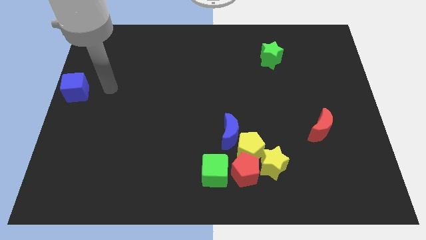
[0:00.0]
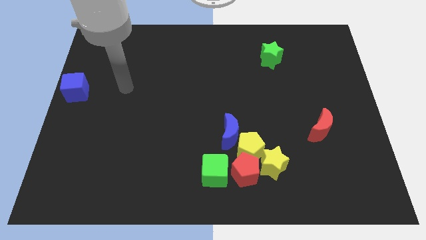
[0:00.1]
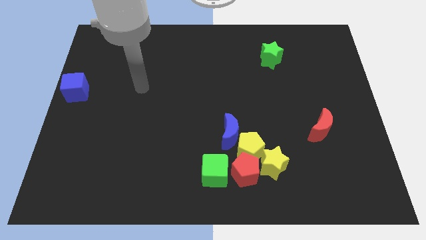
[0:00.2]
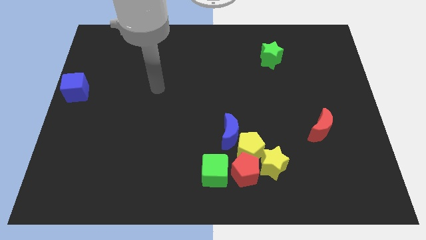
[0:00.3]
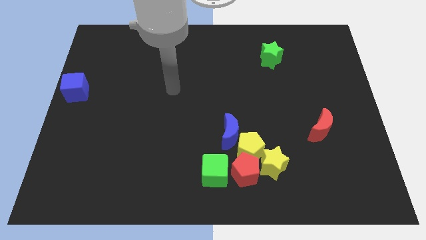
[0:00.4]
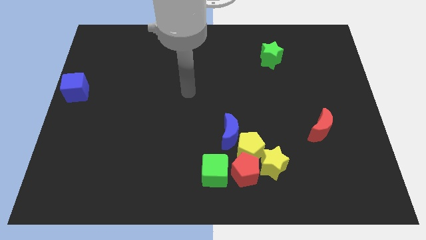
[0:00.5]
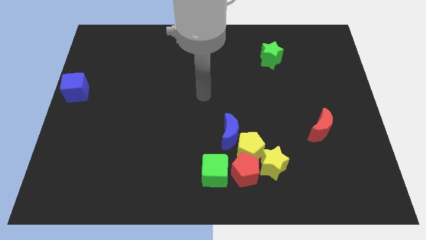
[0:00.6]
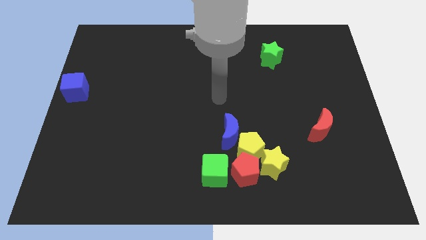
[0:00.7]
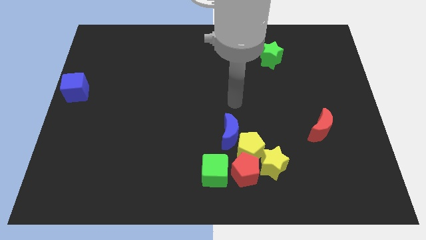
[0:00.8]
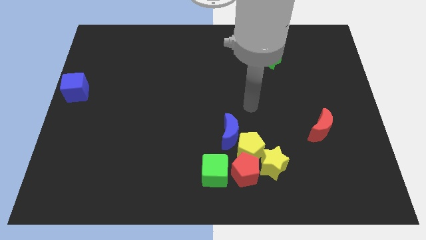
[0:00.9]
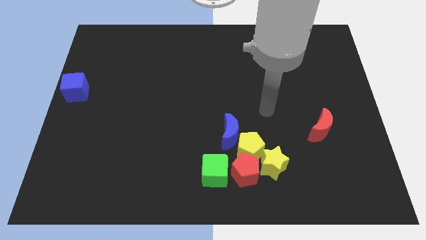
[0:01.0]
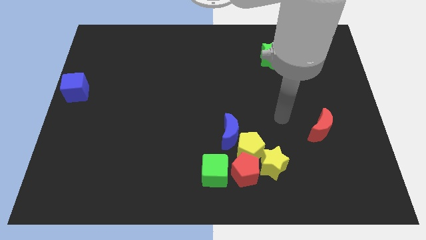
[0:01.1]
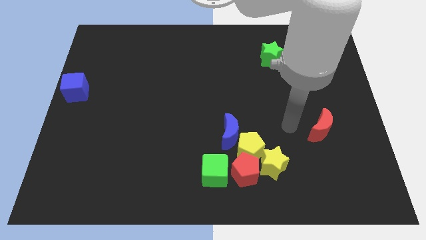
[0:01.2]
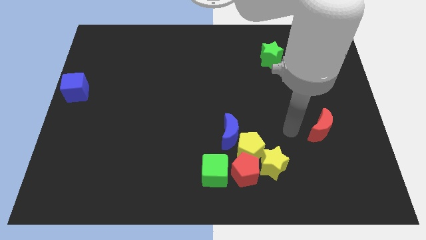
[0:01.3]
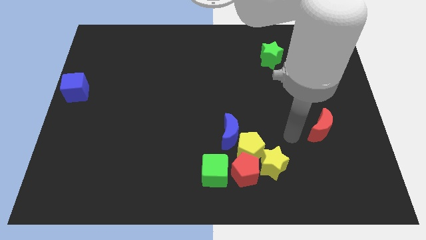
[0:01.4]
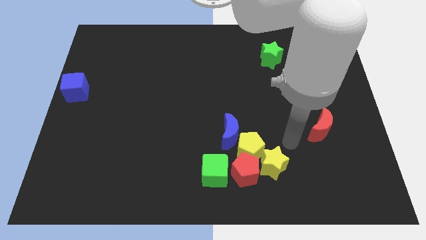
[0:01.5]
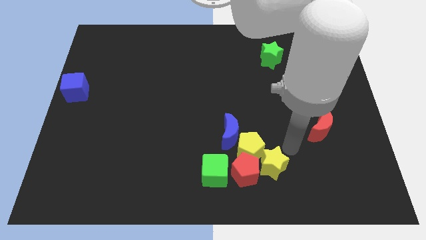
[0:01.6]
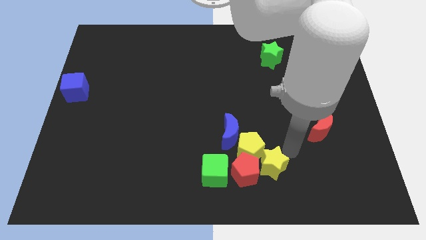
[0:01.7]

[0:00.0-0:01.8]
move your arm towards the yellow star

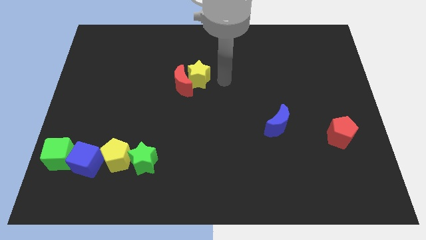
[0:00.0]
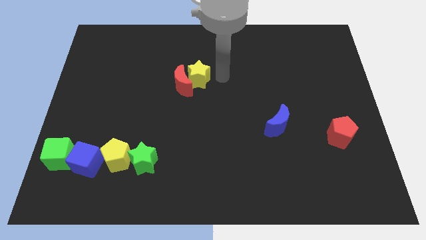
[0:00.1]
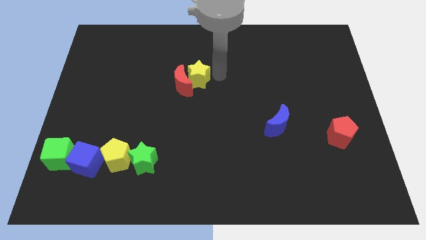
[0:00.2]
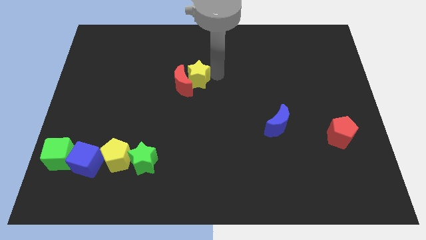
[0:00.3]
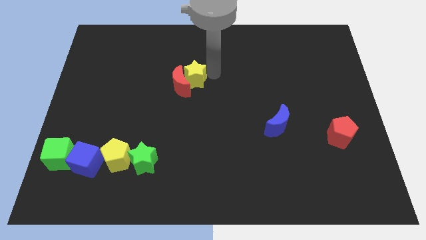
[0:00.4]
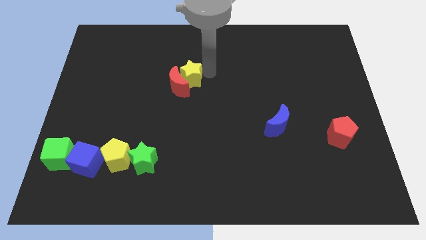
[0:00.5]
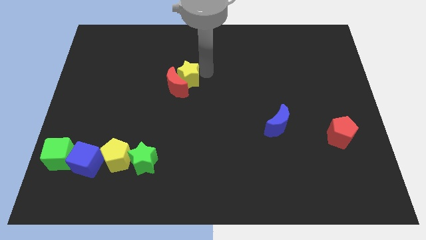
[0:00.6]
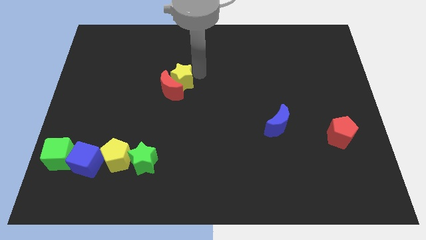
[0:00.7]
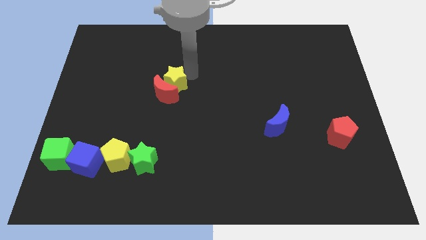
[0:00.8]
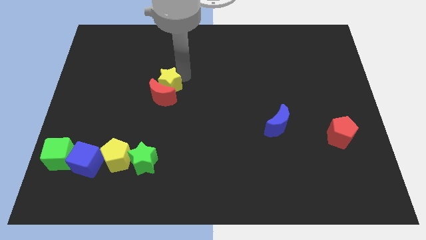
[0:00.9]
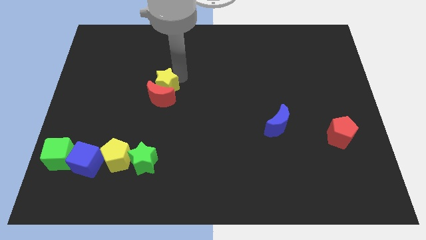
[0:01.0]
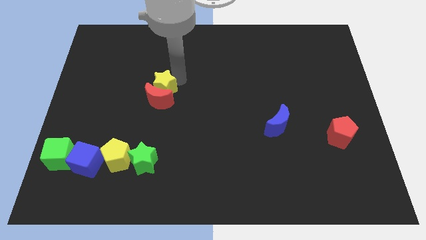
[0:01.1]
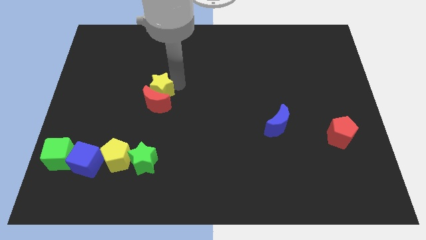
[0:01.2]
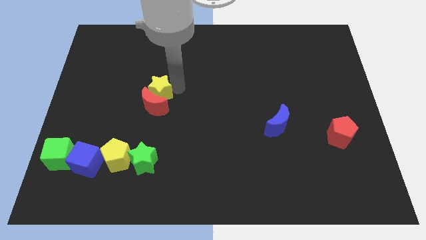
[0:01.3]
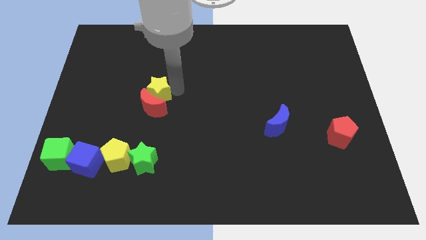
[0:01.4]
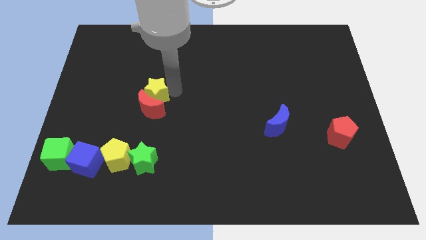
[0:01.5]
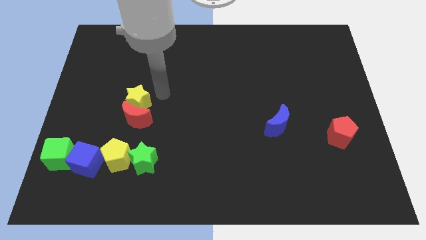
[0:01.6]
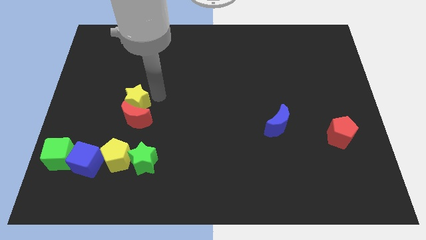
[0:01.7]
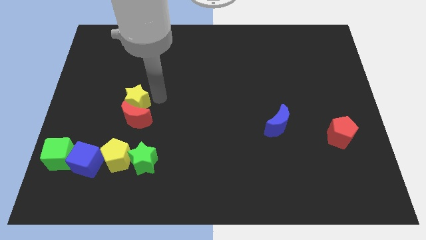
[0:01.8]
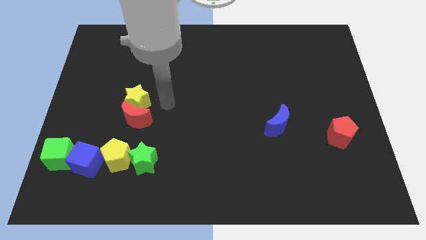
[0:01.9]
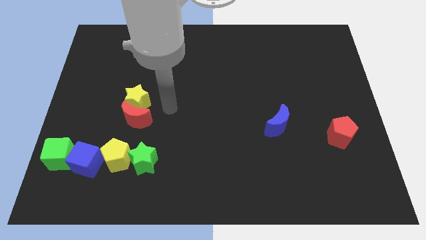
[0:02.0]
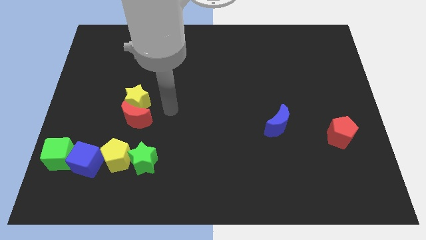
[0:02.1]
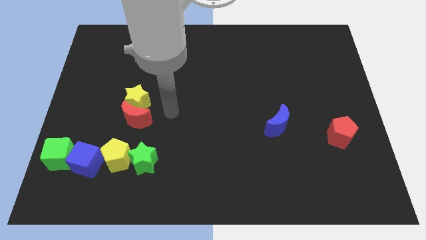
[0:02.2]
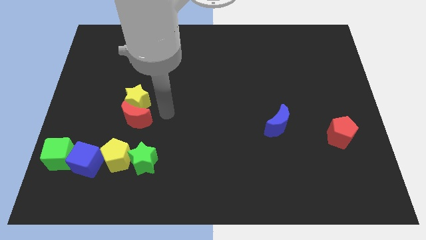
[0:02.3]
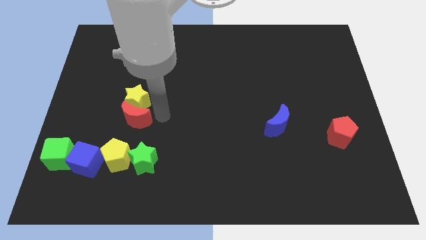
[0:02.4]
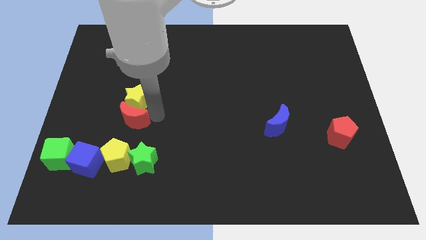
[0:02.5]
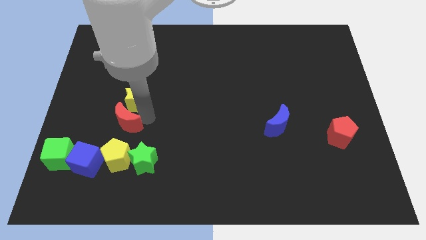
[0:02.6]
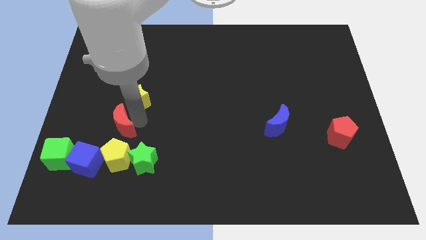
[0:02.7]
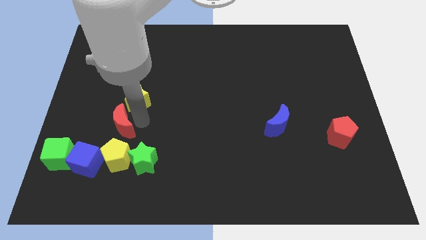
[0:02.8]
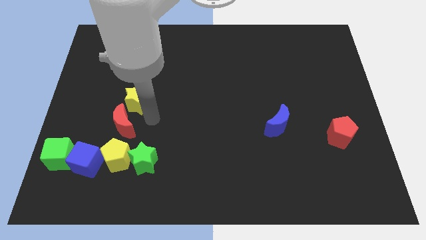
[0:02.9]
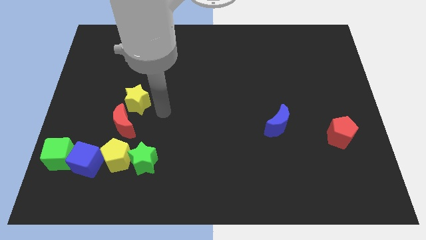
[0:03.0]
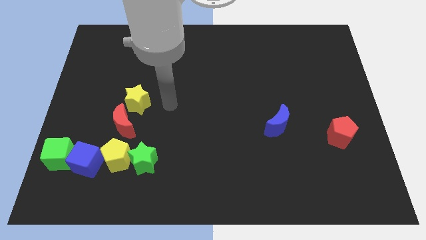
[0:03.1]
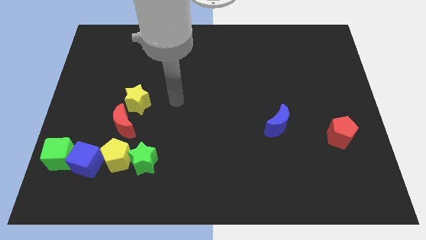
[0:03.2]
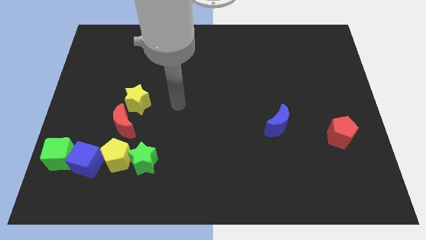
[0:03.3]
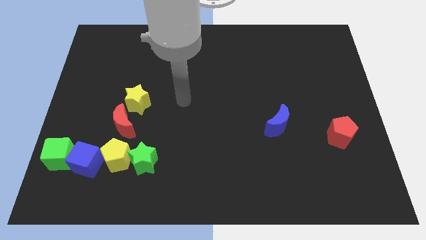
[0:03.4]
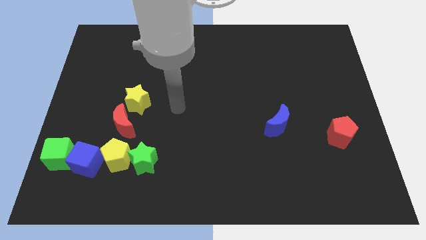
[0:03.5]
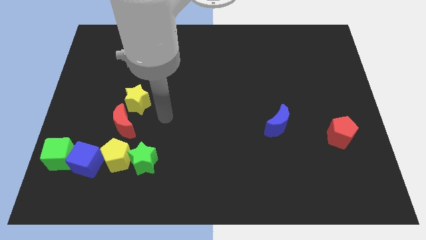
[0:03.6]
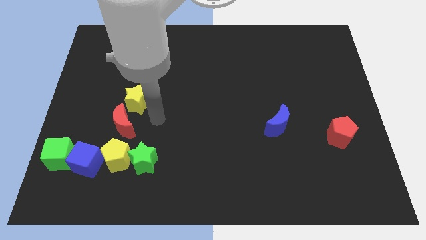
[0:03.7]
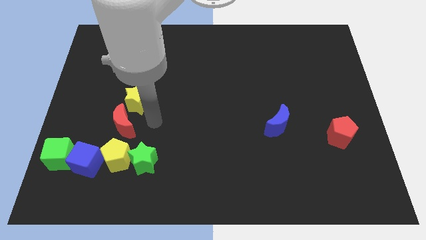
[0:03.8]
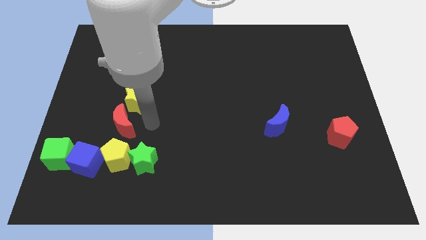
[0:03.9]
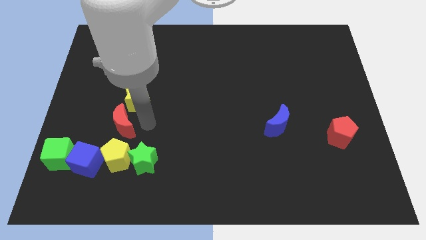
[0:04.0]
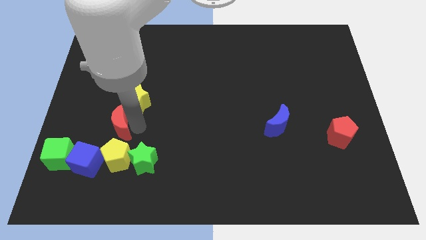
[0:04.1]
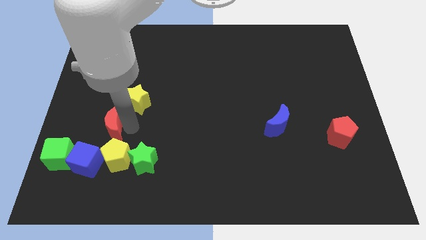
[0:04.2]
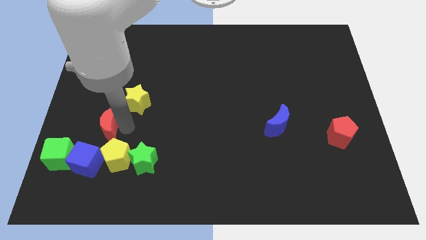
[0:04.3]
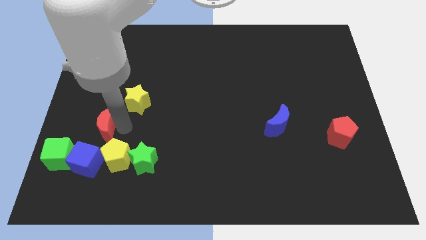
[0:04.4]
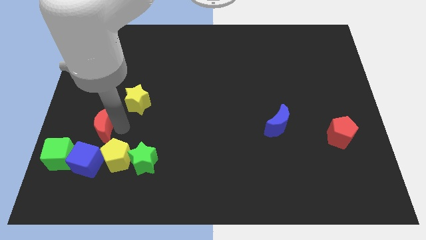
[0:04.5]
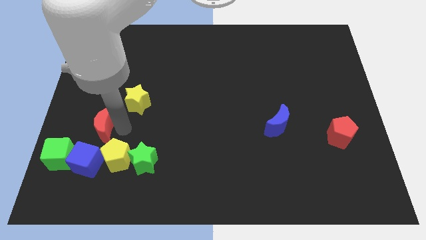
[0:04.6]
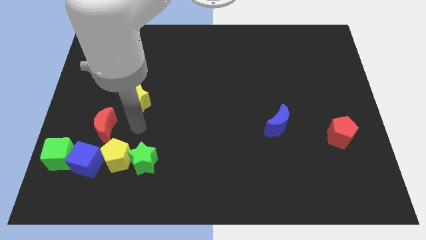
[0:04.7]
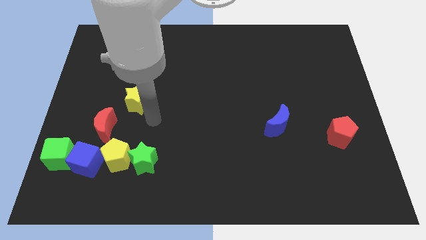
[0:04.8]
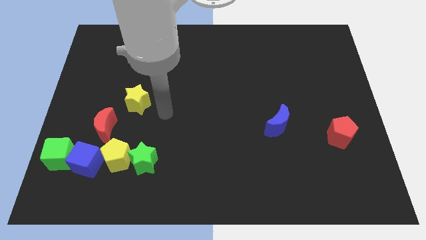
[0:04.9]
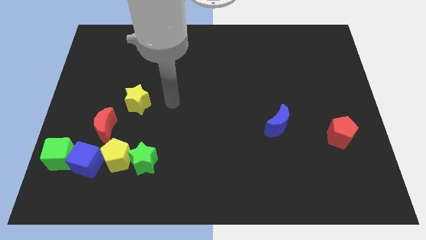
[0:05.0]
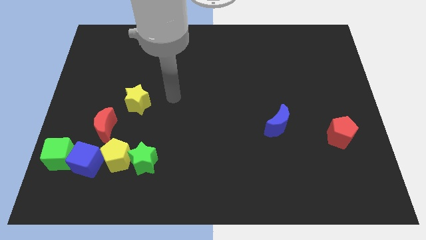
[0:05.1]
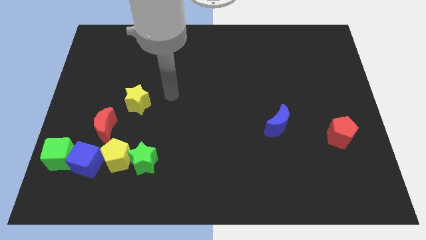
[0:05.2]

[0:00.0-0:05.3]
place the red crescent above the blue cube

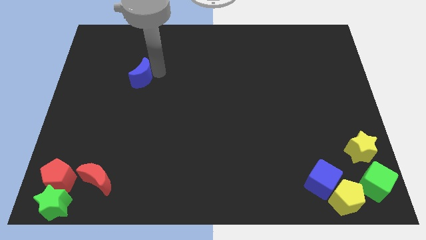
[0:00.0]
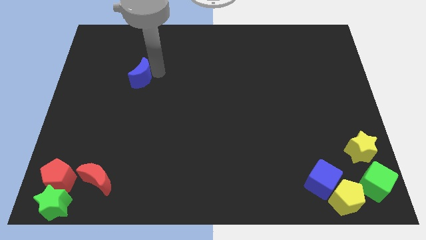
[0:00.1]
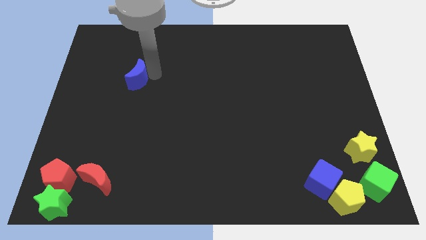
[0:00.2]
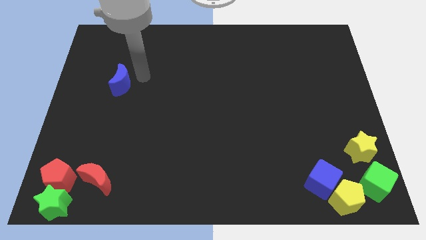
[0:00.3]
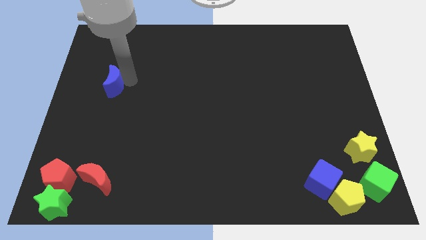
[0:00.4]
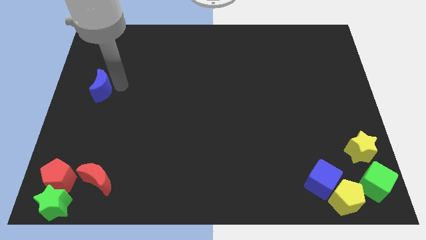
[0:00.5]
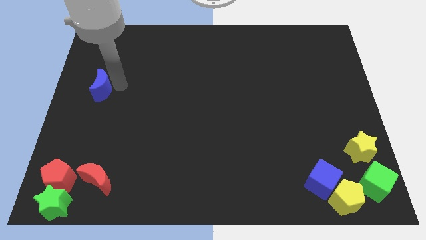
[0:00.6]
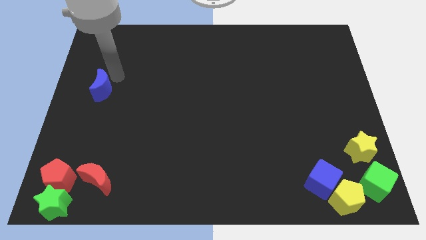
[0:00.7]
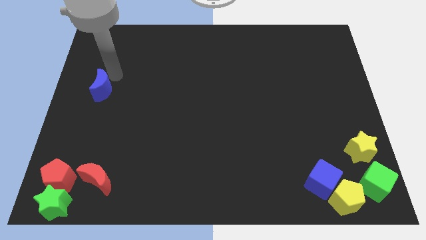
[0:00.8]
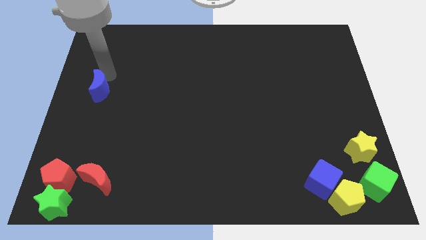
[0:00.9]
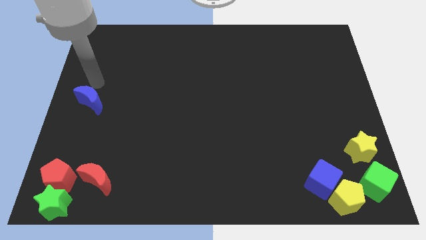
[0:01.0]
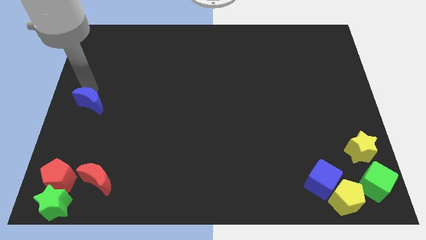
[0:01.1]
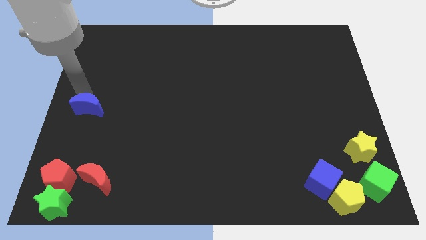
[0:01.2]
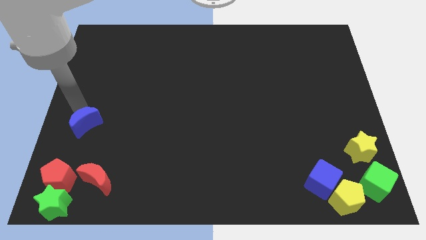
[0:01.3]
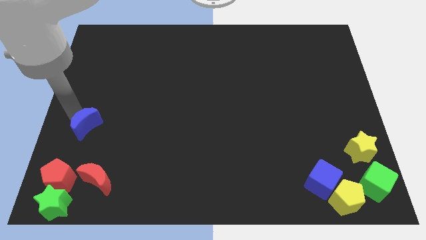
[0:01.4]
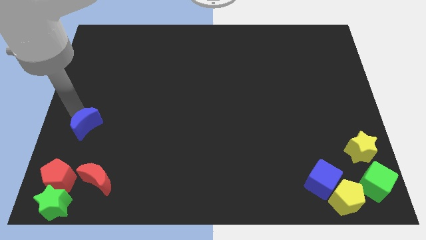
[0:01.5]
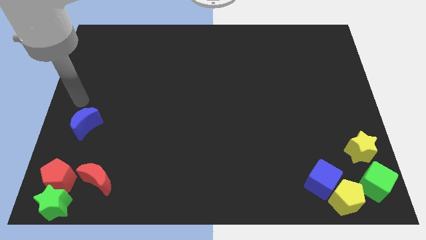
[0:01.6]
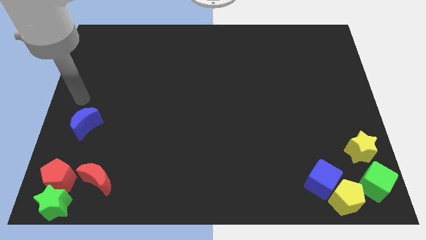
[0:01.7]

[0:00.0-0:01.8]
put the blue moon diagonally top left to the red moon

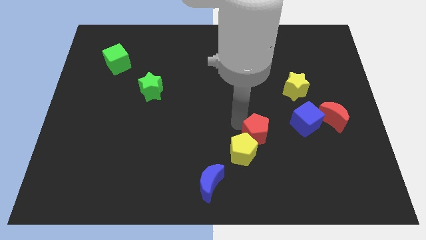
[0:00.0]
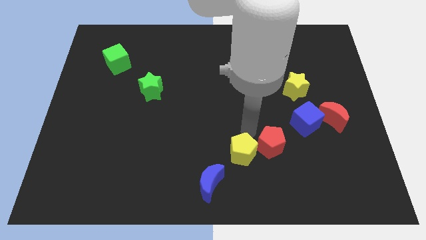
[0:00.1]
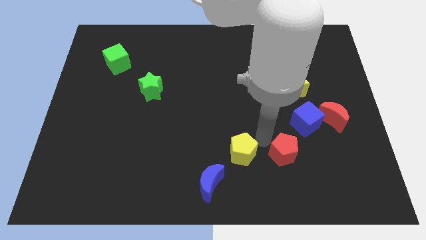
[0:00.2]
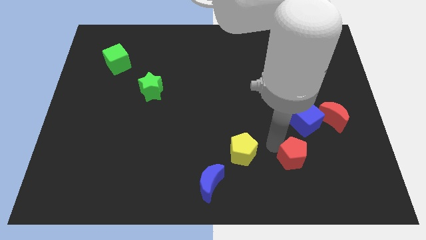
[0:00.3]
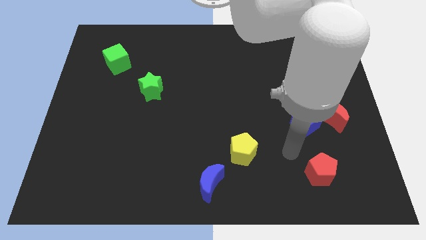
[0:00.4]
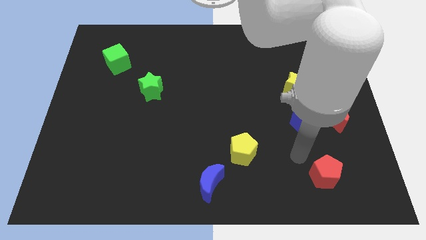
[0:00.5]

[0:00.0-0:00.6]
push red pentagon below blue cube
